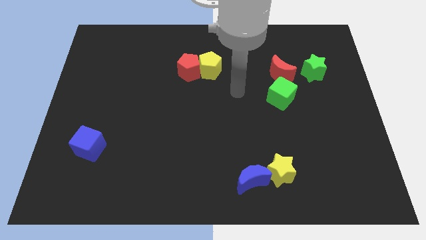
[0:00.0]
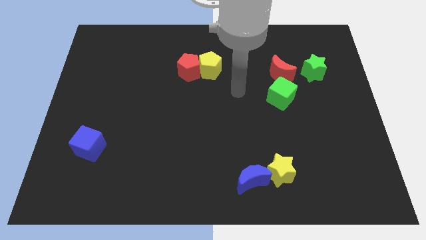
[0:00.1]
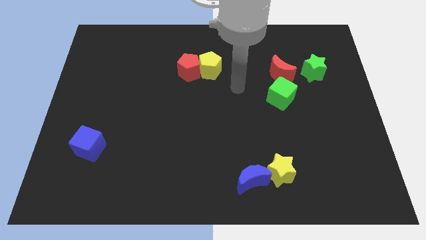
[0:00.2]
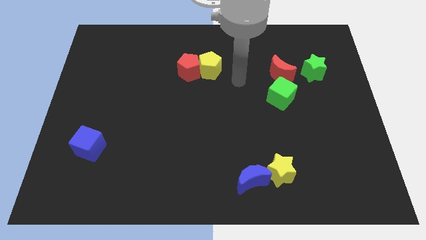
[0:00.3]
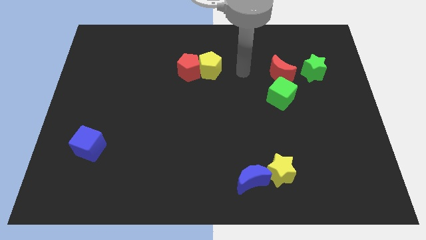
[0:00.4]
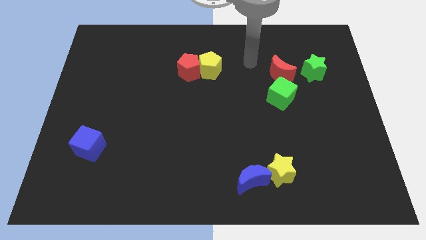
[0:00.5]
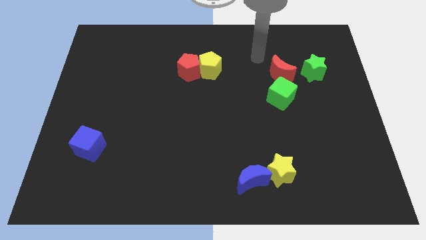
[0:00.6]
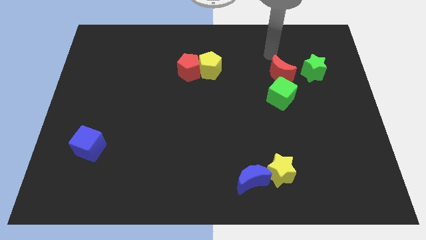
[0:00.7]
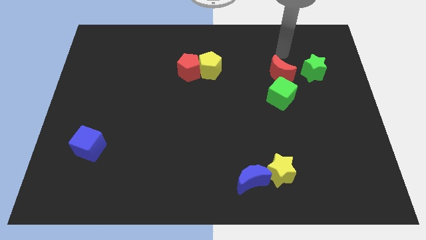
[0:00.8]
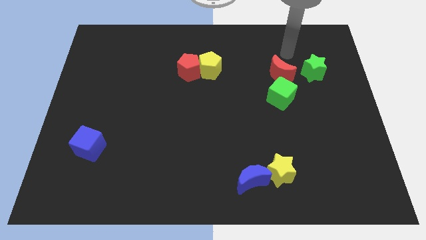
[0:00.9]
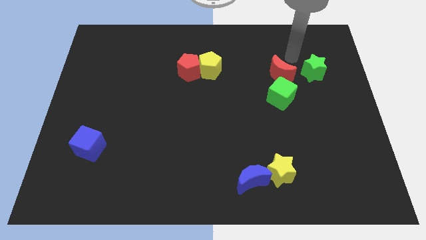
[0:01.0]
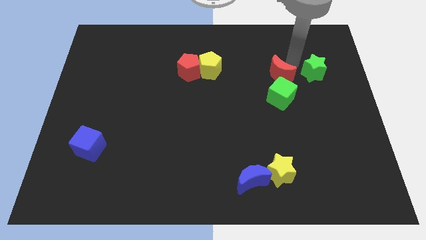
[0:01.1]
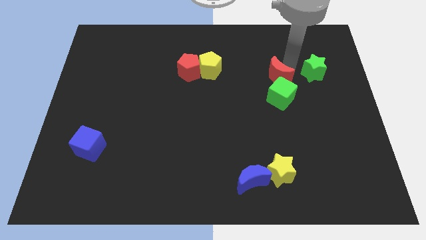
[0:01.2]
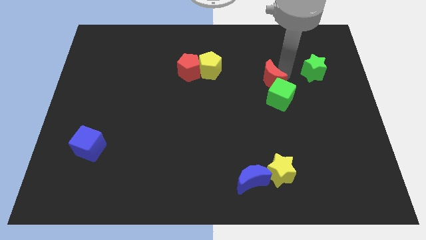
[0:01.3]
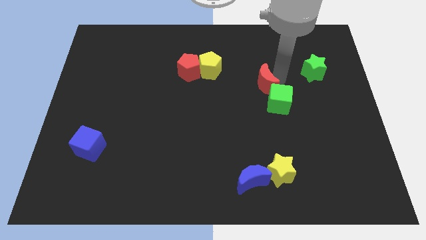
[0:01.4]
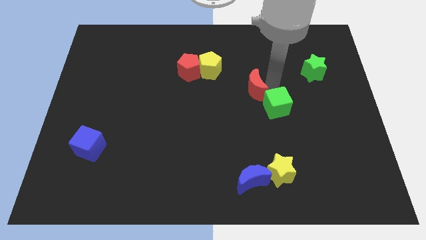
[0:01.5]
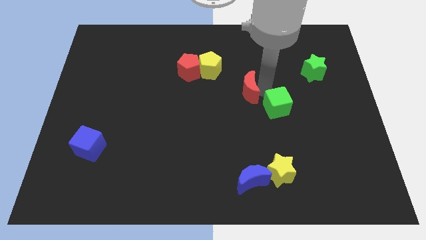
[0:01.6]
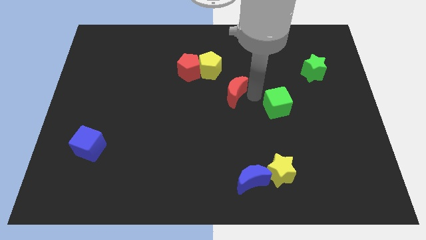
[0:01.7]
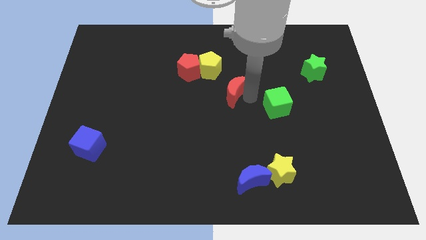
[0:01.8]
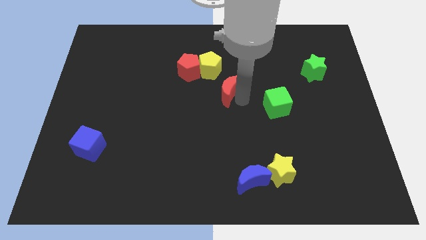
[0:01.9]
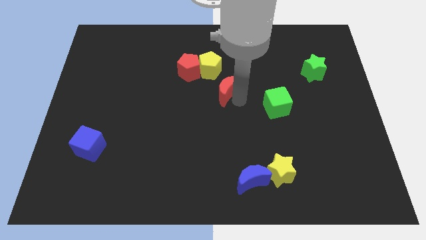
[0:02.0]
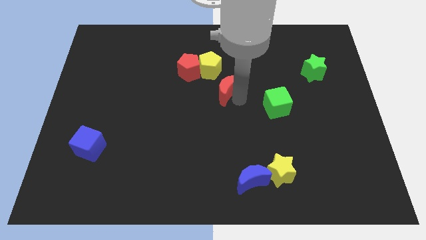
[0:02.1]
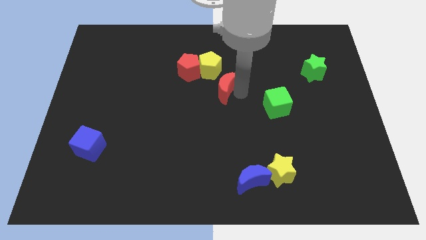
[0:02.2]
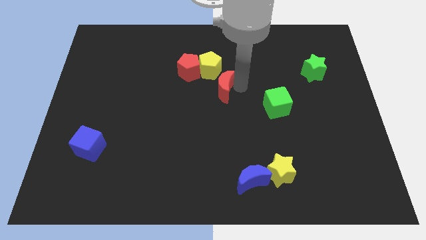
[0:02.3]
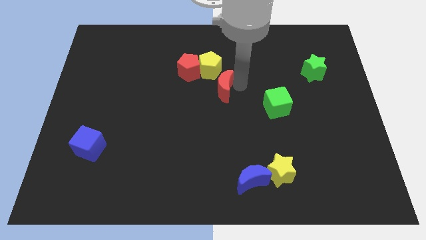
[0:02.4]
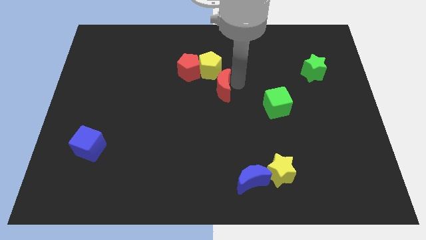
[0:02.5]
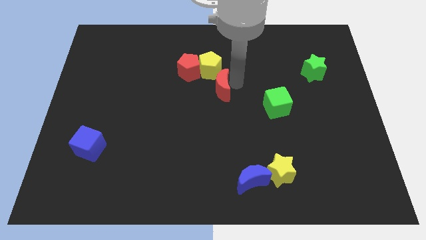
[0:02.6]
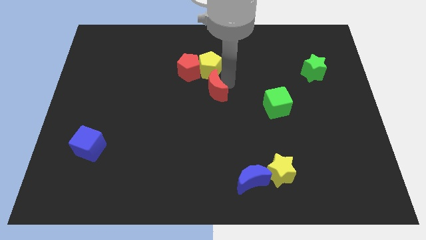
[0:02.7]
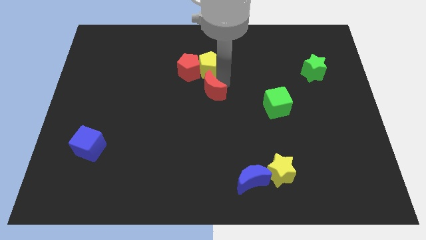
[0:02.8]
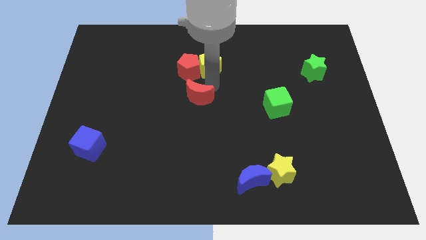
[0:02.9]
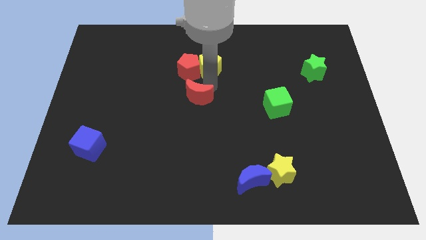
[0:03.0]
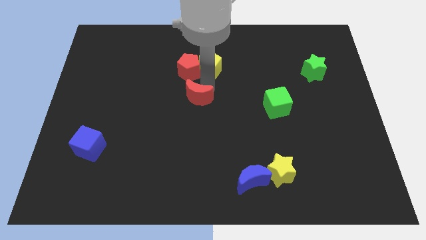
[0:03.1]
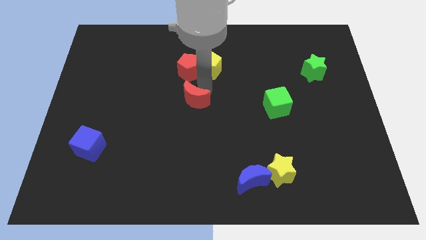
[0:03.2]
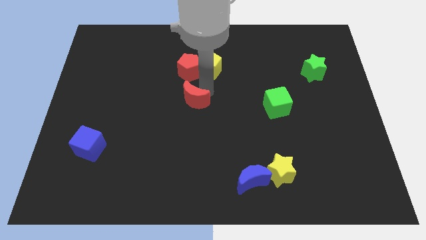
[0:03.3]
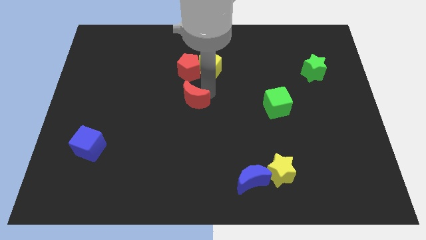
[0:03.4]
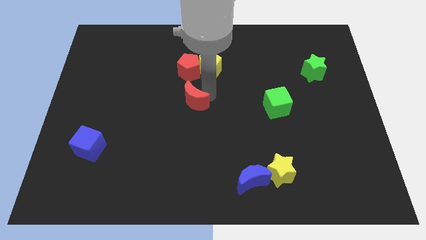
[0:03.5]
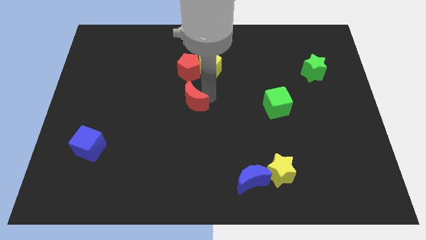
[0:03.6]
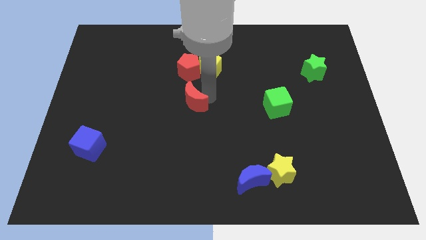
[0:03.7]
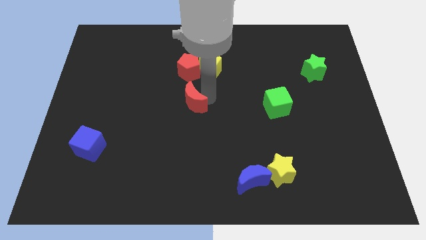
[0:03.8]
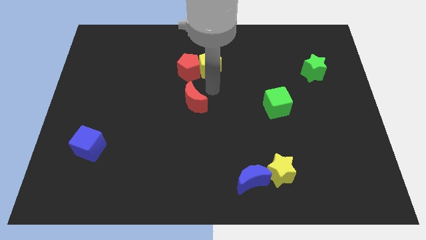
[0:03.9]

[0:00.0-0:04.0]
move red moon below the red pentagon

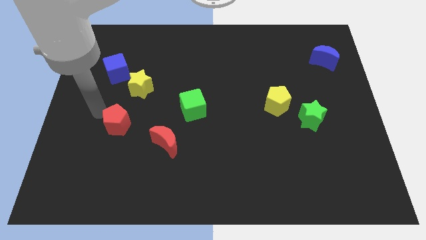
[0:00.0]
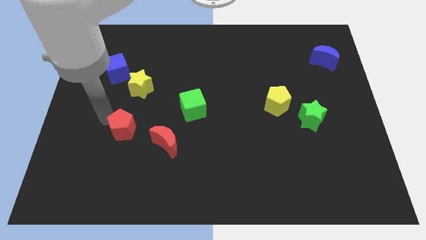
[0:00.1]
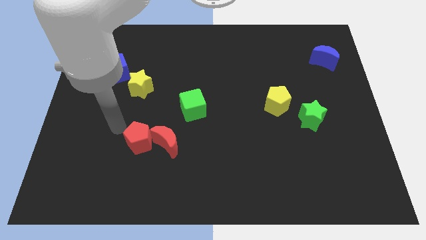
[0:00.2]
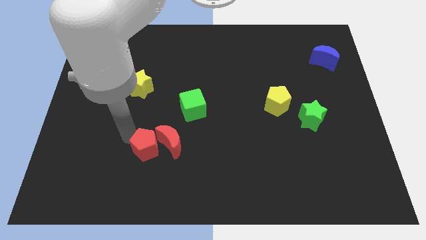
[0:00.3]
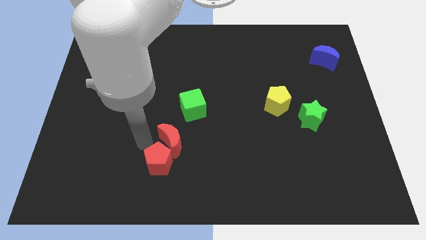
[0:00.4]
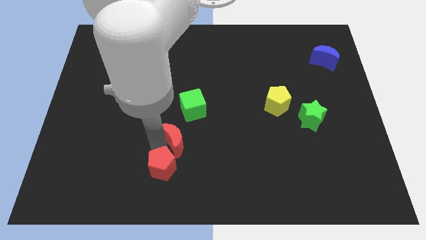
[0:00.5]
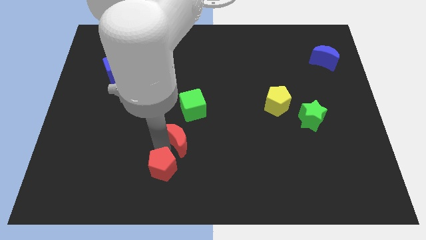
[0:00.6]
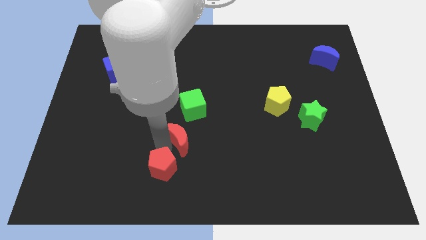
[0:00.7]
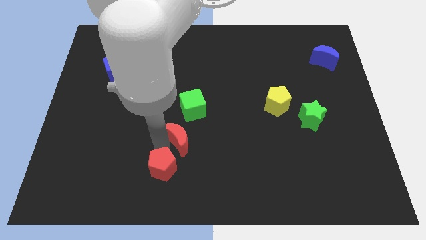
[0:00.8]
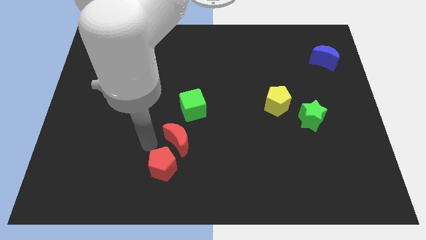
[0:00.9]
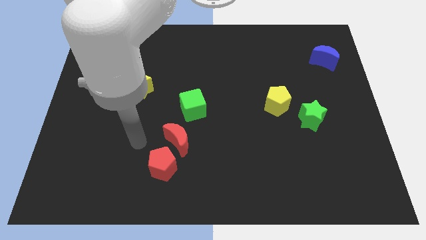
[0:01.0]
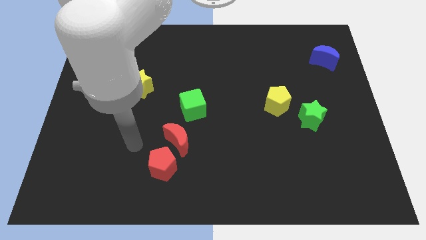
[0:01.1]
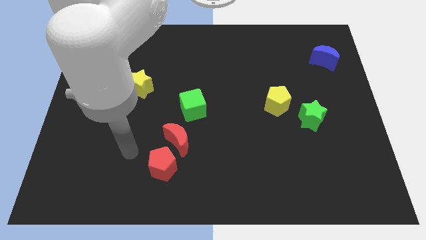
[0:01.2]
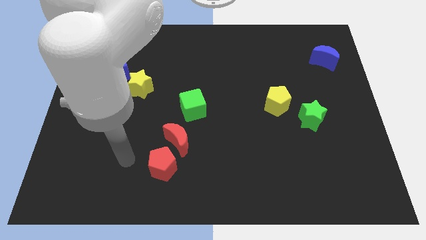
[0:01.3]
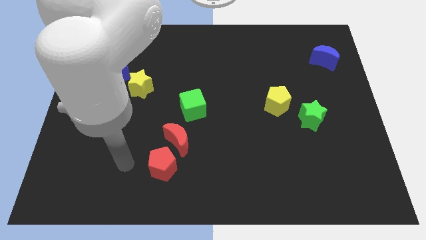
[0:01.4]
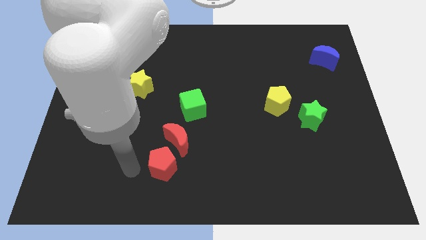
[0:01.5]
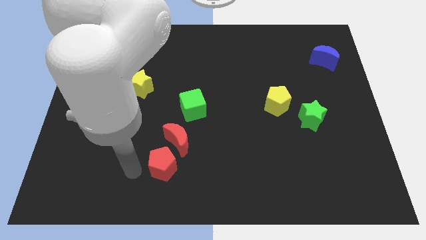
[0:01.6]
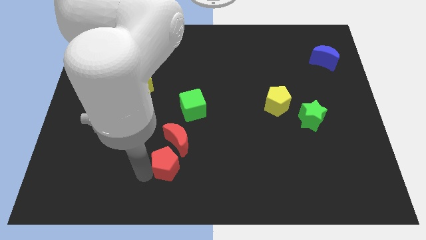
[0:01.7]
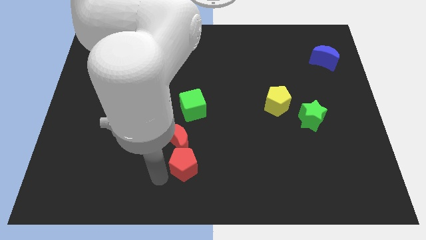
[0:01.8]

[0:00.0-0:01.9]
place the red pentagon below the red crescent

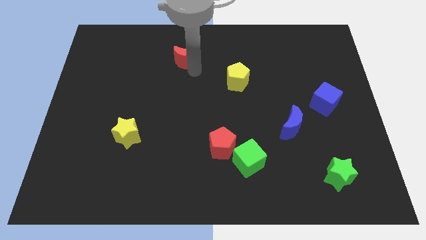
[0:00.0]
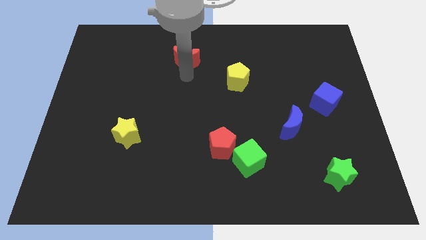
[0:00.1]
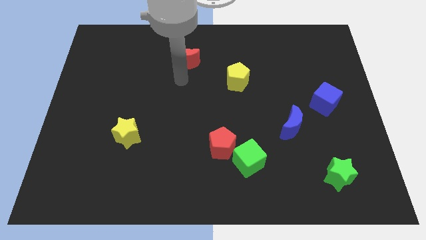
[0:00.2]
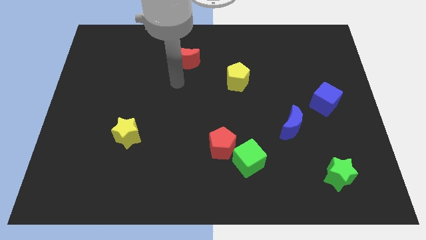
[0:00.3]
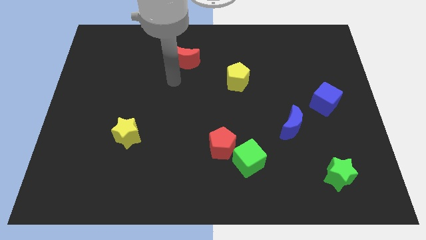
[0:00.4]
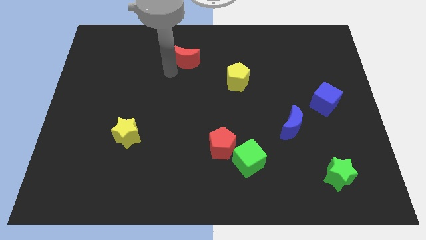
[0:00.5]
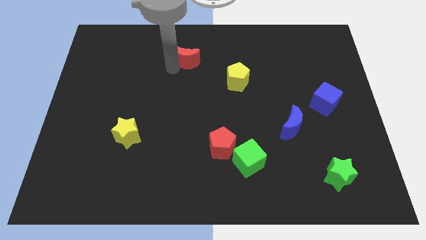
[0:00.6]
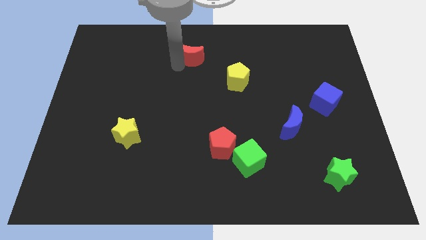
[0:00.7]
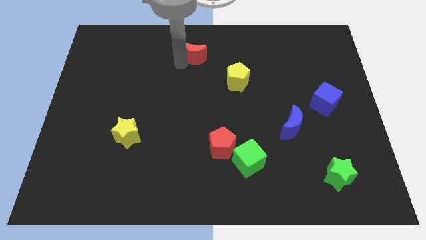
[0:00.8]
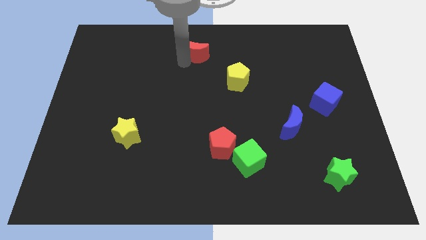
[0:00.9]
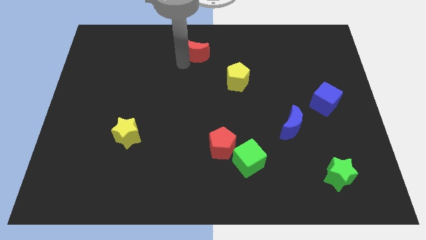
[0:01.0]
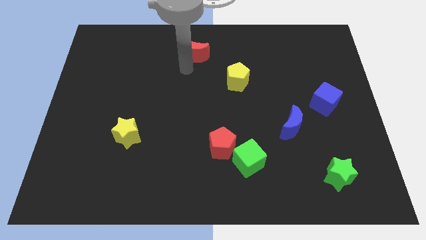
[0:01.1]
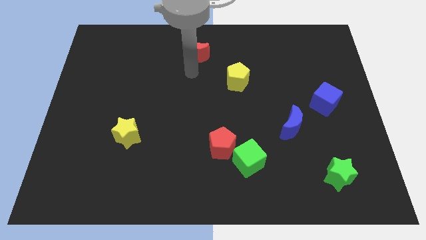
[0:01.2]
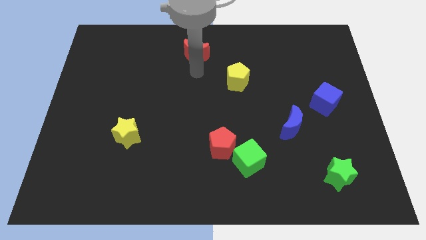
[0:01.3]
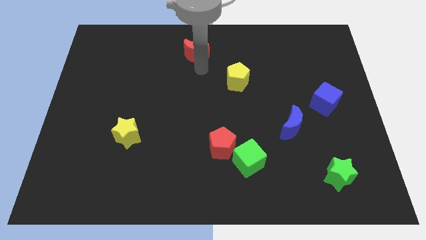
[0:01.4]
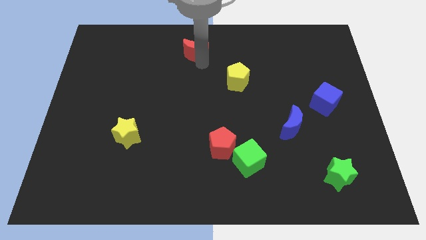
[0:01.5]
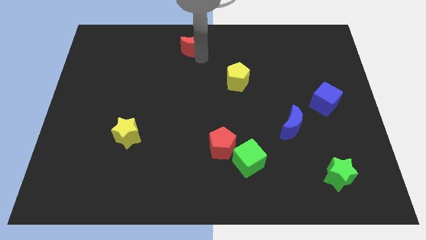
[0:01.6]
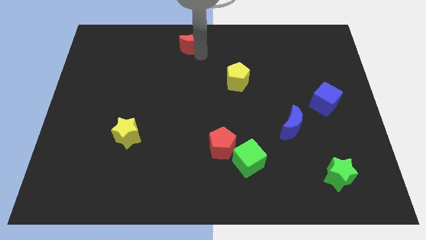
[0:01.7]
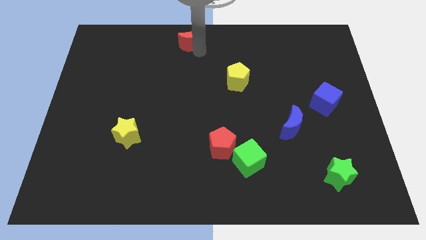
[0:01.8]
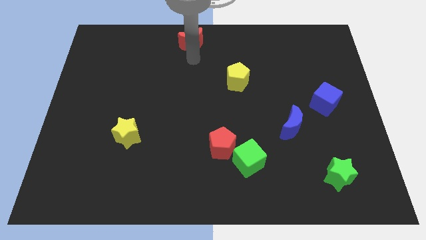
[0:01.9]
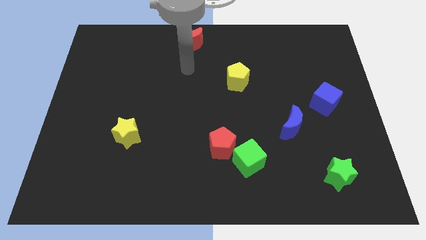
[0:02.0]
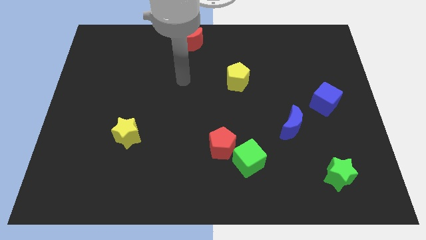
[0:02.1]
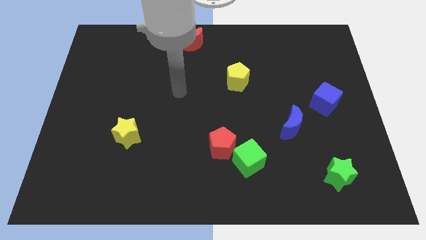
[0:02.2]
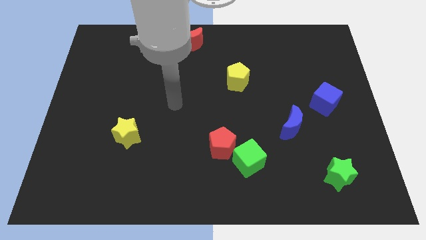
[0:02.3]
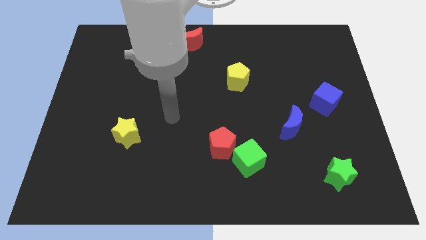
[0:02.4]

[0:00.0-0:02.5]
push red moon to the top center of the board

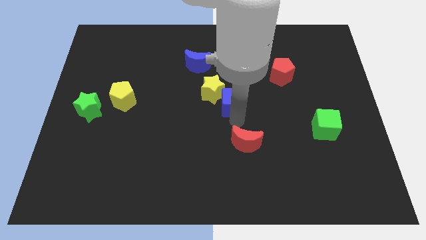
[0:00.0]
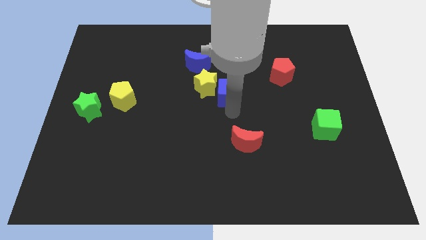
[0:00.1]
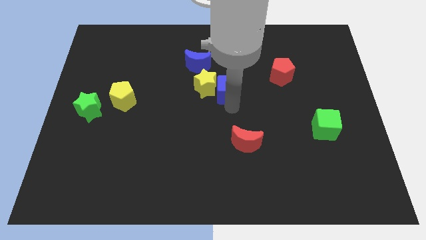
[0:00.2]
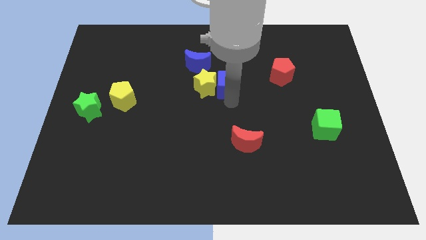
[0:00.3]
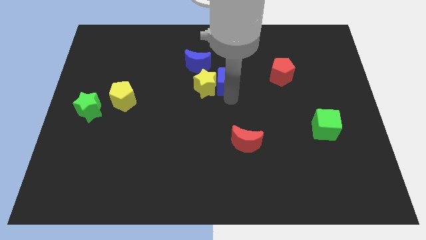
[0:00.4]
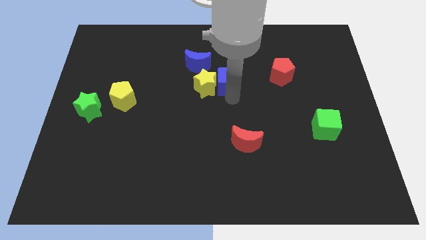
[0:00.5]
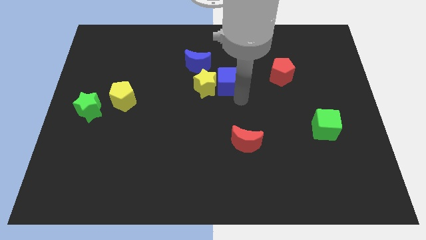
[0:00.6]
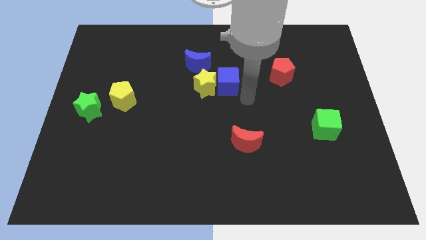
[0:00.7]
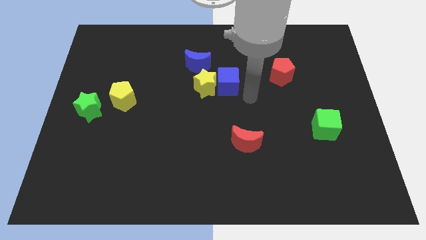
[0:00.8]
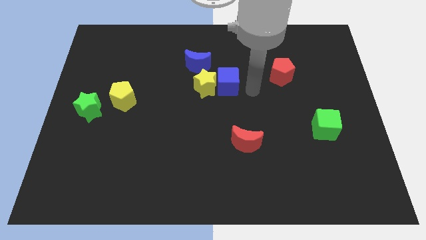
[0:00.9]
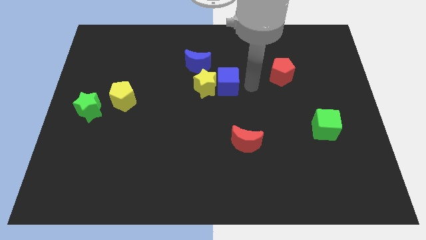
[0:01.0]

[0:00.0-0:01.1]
point your arm right to blue cube
